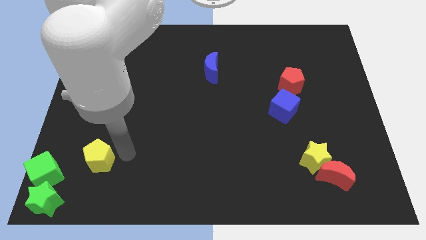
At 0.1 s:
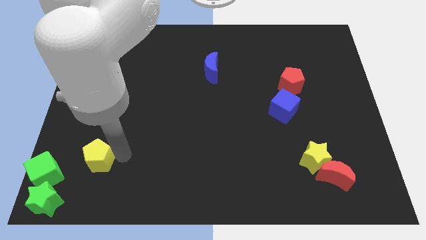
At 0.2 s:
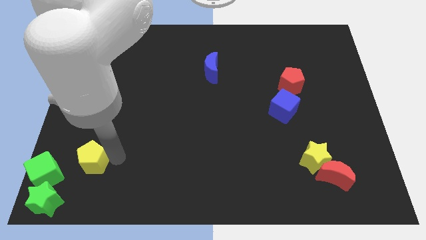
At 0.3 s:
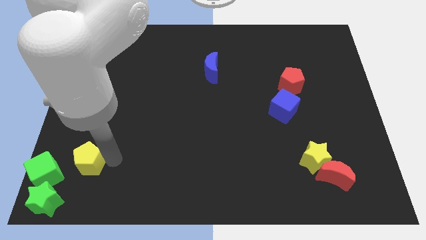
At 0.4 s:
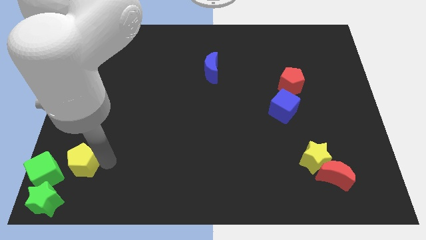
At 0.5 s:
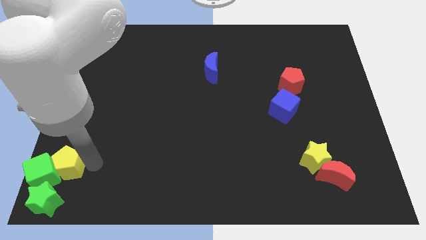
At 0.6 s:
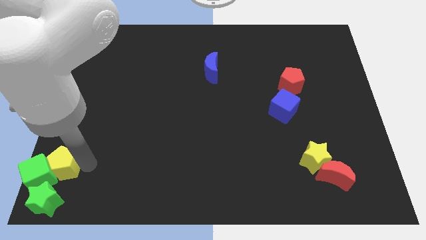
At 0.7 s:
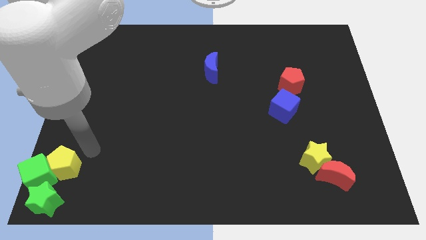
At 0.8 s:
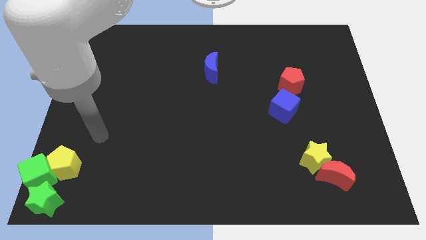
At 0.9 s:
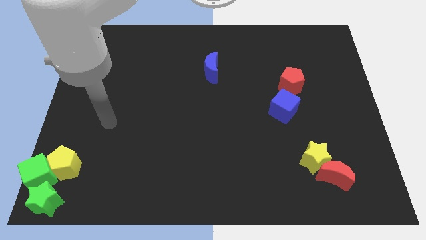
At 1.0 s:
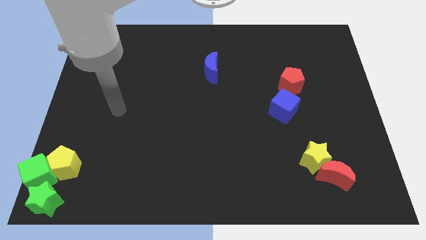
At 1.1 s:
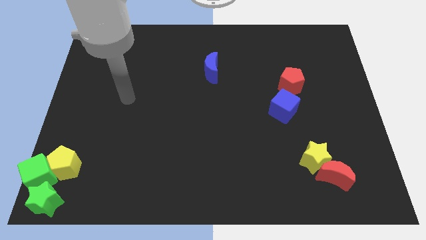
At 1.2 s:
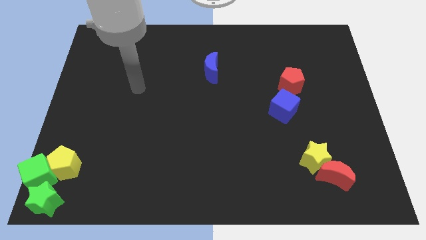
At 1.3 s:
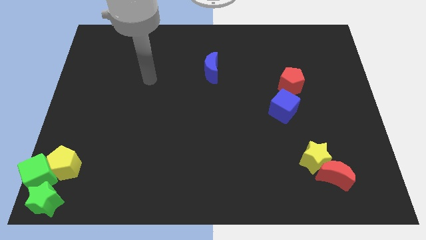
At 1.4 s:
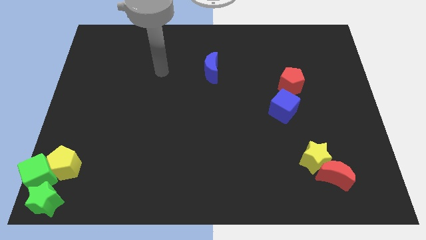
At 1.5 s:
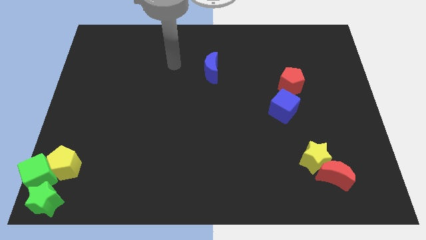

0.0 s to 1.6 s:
push the yellow pentagon to the bottom left corner of the board

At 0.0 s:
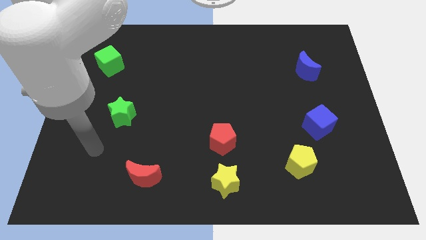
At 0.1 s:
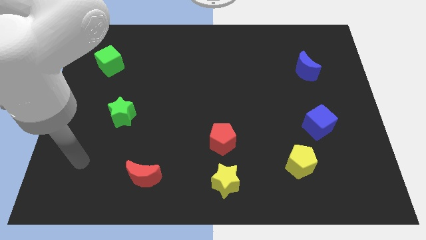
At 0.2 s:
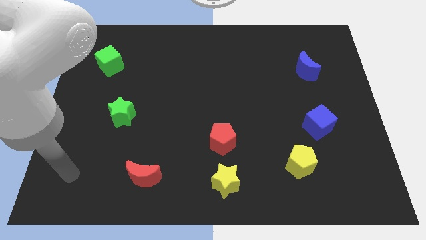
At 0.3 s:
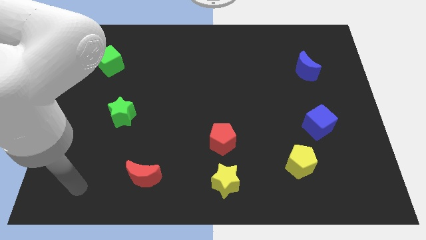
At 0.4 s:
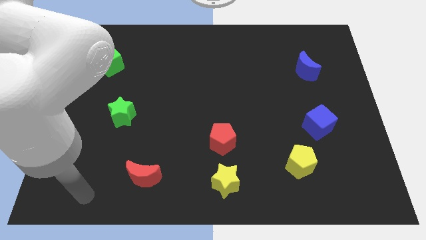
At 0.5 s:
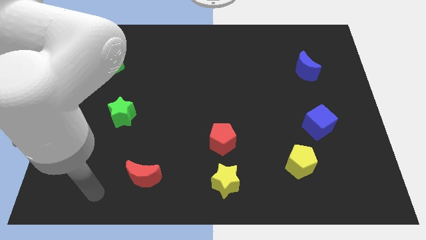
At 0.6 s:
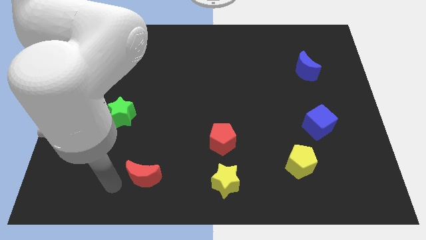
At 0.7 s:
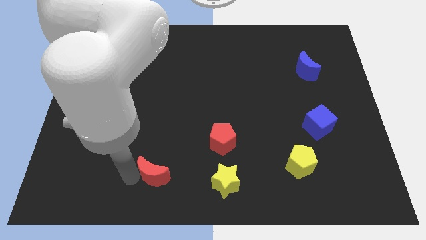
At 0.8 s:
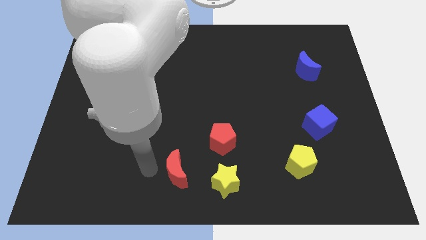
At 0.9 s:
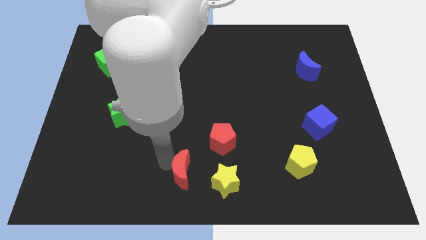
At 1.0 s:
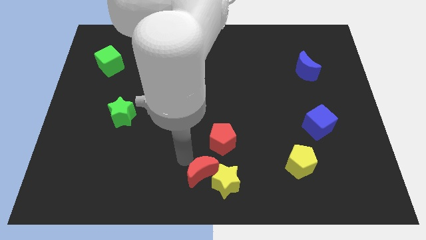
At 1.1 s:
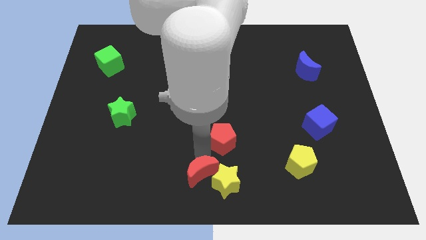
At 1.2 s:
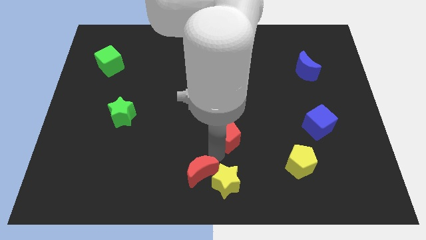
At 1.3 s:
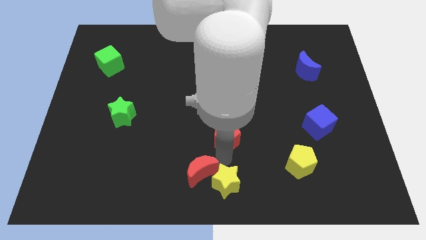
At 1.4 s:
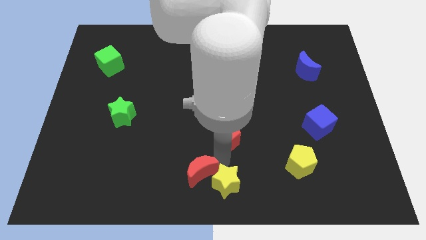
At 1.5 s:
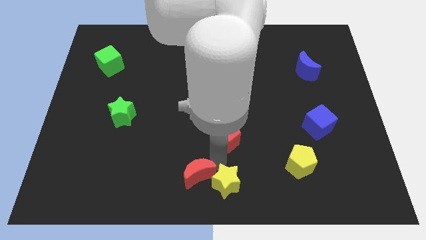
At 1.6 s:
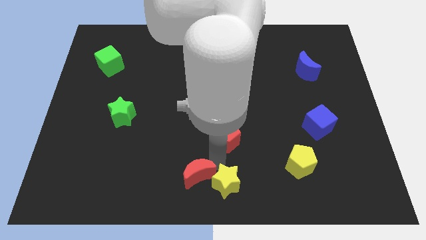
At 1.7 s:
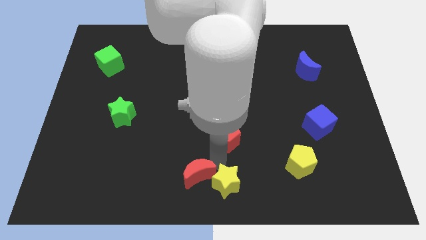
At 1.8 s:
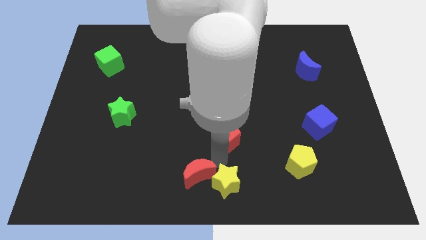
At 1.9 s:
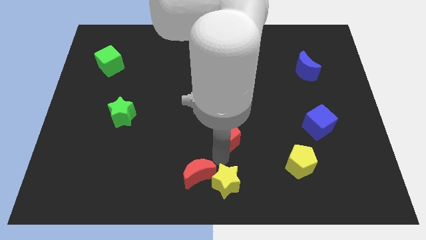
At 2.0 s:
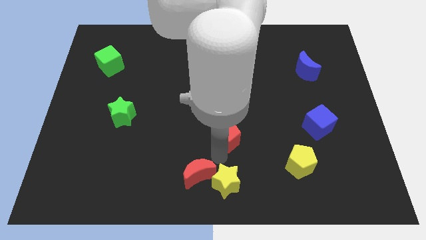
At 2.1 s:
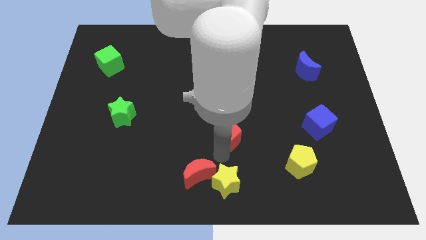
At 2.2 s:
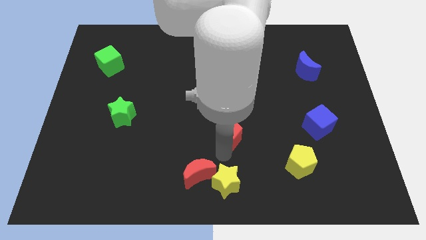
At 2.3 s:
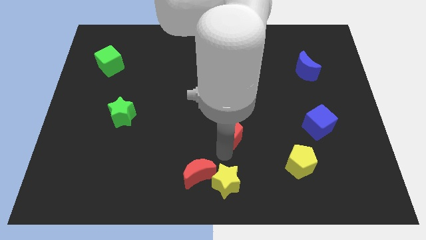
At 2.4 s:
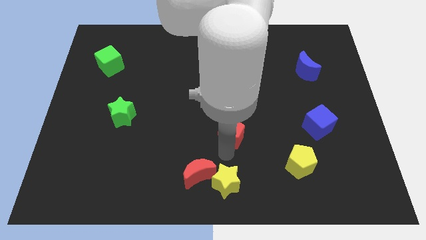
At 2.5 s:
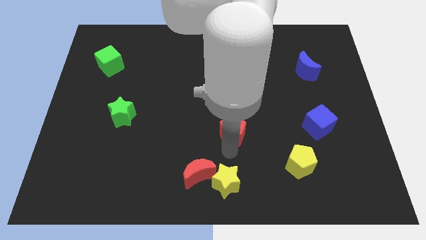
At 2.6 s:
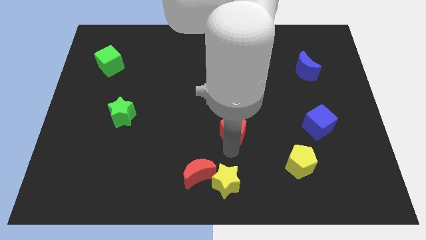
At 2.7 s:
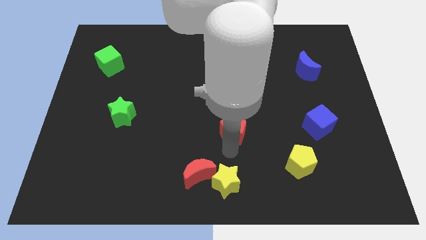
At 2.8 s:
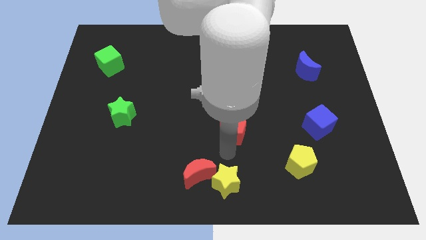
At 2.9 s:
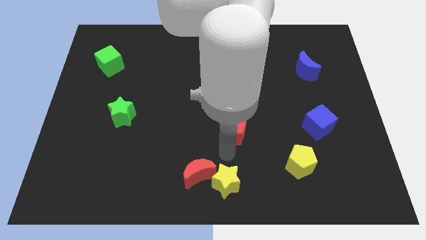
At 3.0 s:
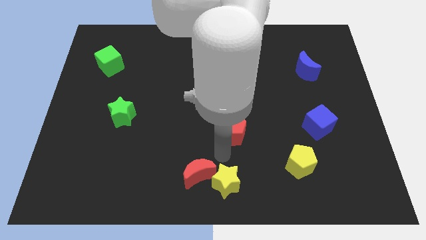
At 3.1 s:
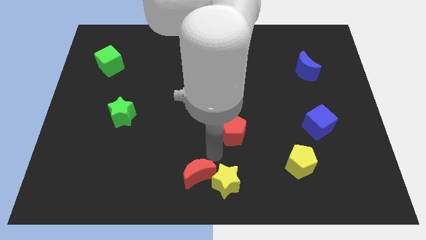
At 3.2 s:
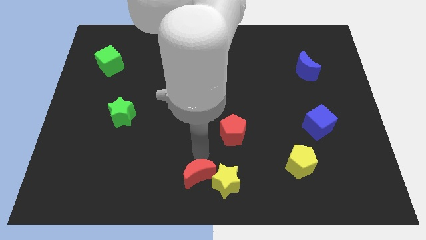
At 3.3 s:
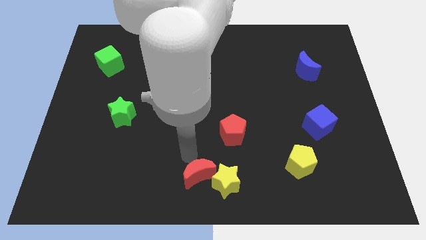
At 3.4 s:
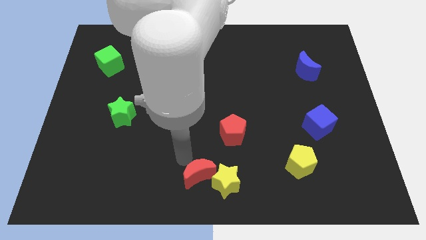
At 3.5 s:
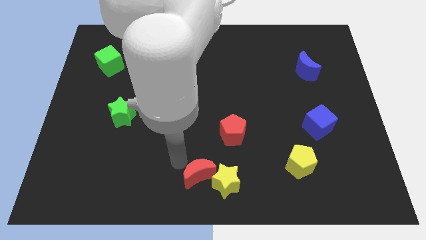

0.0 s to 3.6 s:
push the red moon into the yellow star

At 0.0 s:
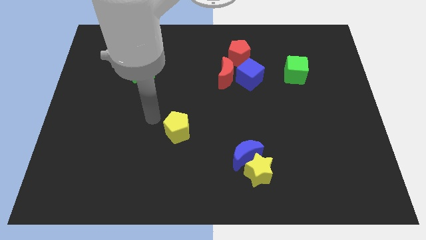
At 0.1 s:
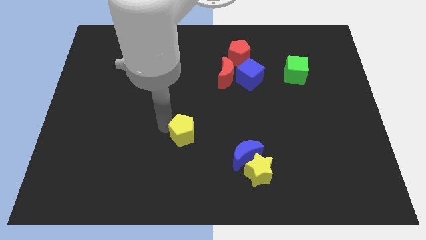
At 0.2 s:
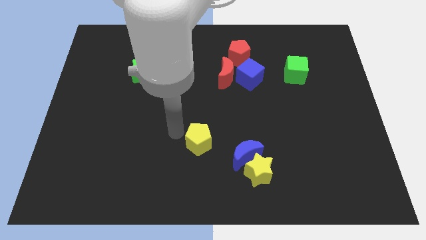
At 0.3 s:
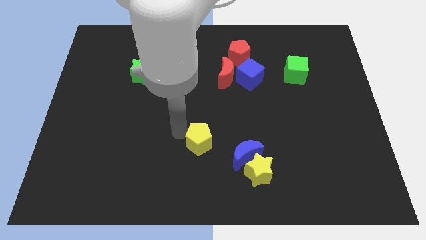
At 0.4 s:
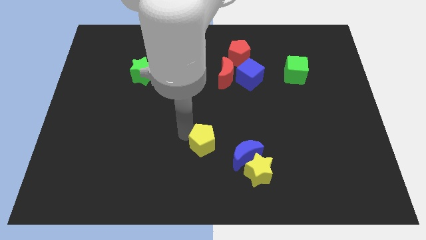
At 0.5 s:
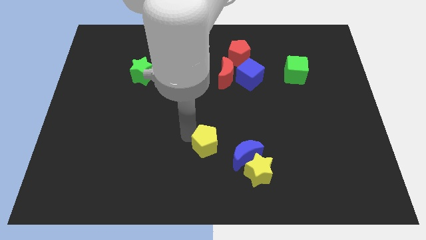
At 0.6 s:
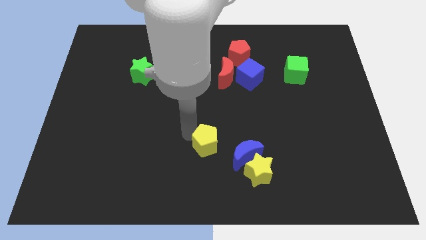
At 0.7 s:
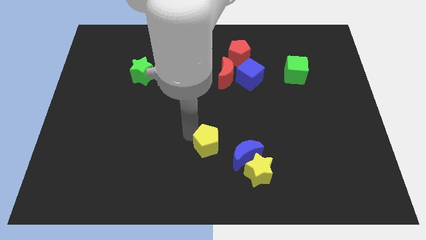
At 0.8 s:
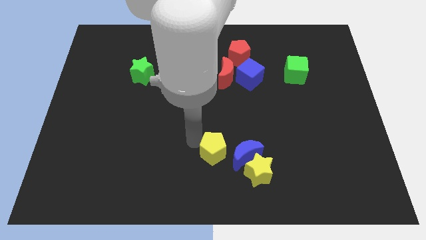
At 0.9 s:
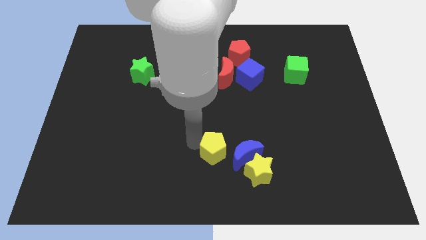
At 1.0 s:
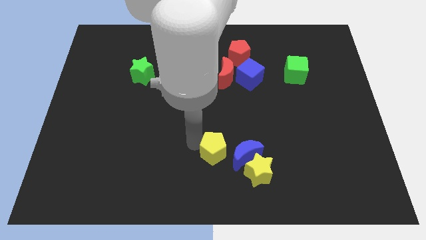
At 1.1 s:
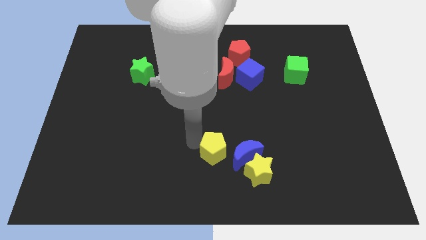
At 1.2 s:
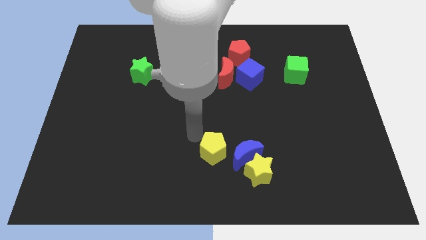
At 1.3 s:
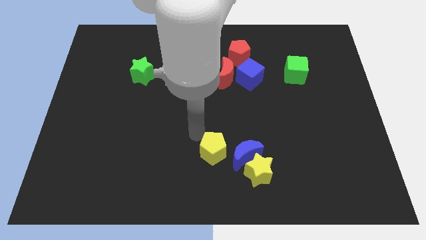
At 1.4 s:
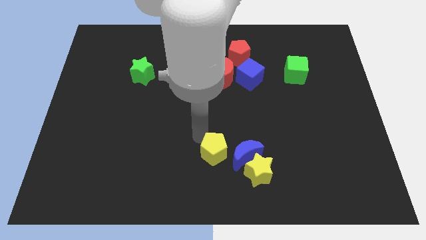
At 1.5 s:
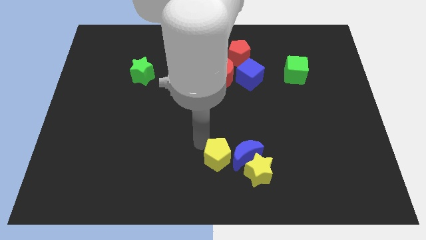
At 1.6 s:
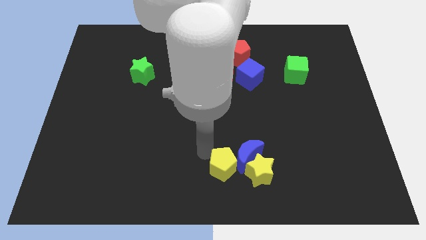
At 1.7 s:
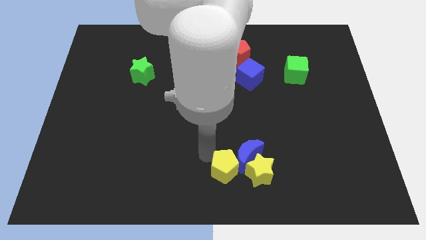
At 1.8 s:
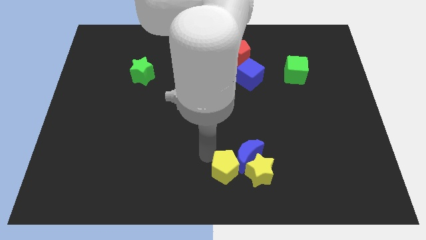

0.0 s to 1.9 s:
move the yellow pentagon right to the blue crescent

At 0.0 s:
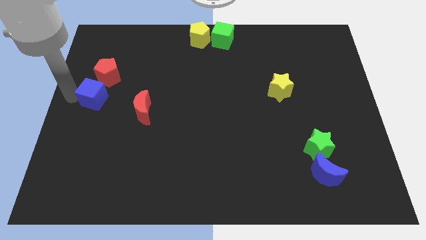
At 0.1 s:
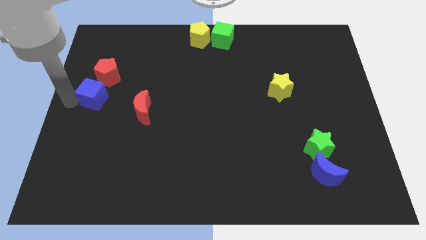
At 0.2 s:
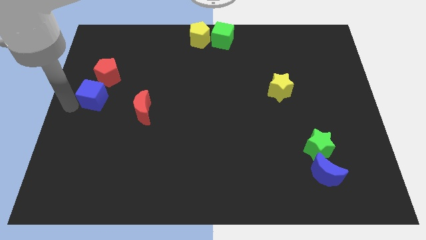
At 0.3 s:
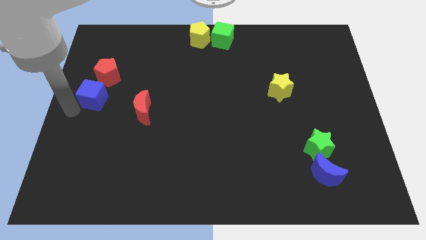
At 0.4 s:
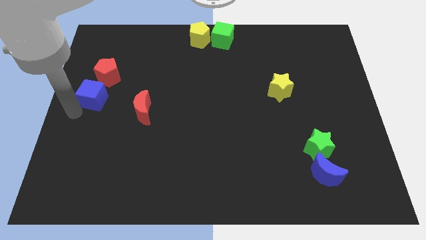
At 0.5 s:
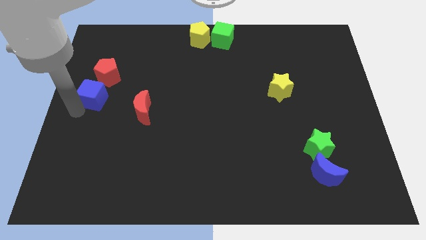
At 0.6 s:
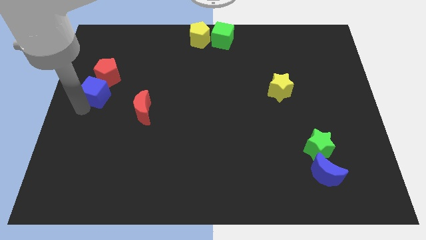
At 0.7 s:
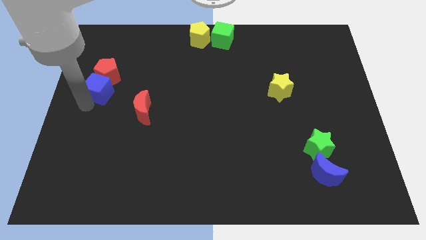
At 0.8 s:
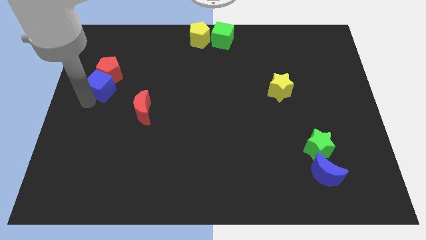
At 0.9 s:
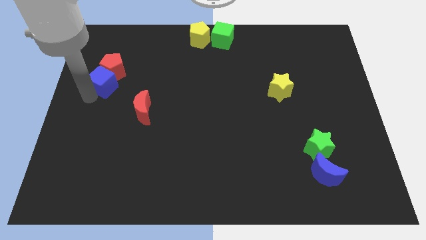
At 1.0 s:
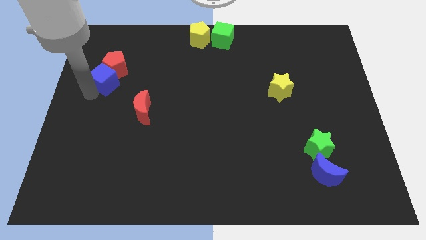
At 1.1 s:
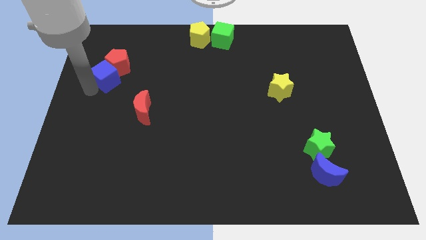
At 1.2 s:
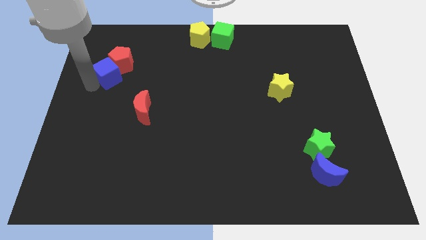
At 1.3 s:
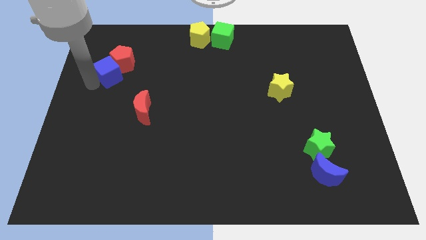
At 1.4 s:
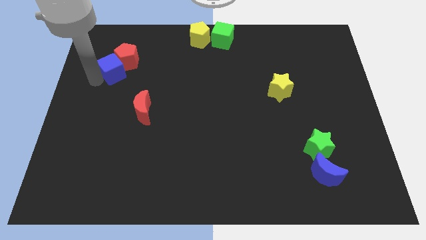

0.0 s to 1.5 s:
push the blue cube into the red pentagon

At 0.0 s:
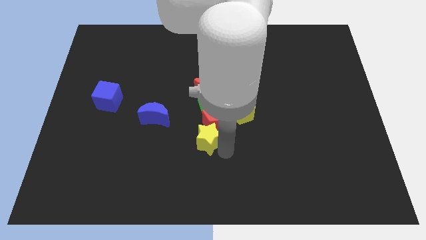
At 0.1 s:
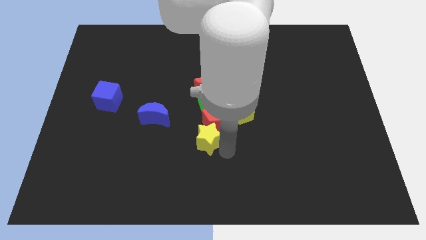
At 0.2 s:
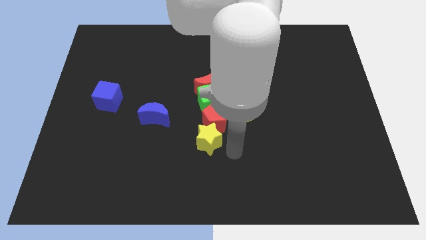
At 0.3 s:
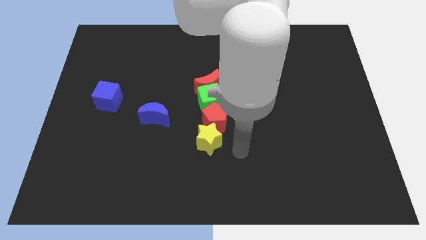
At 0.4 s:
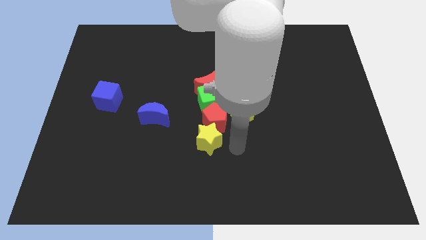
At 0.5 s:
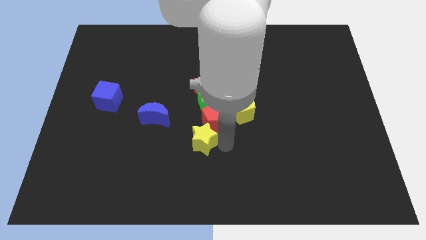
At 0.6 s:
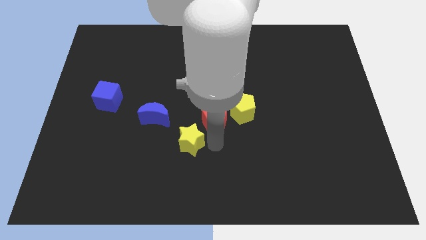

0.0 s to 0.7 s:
slightly push yellow star towards left
